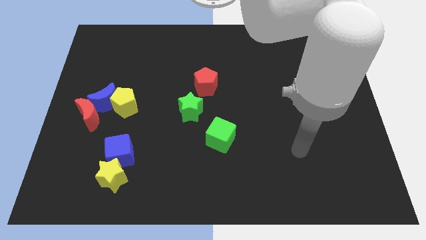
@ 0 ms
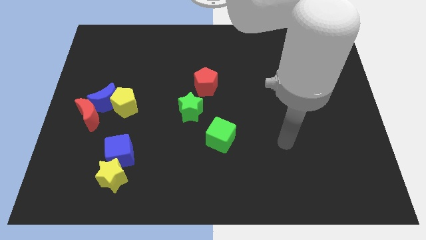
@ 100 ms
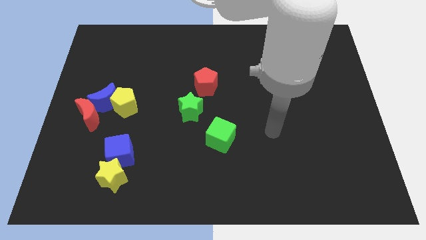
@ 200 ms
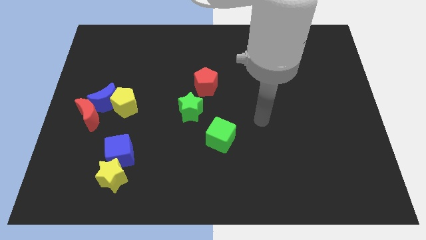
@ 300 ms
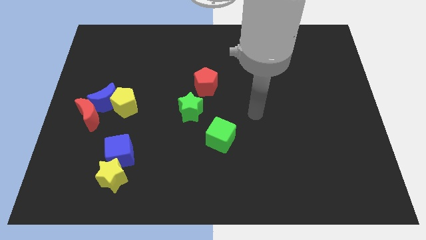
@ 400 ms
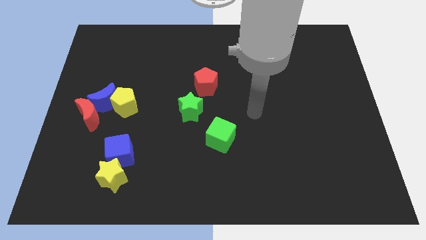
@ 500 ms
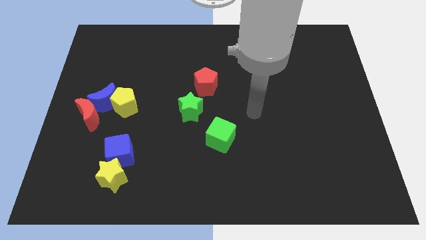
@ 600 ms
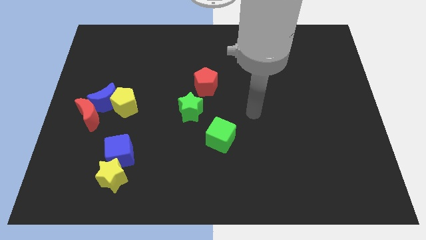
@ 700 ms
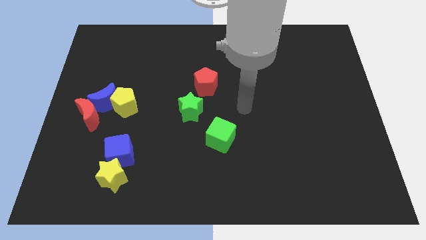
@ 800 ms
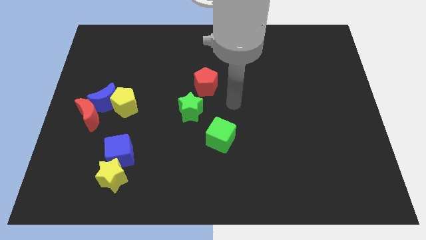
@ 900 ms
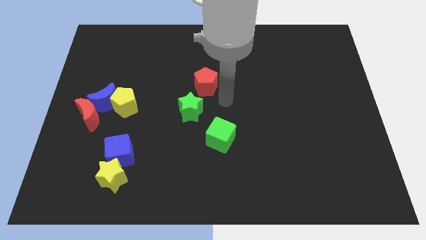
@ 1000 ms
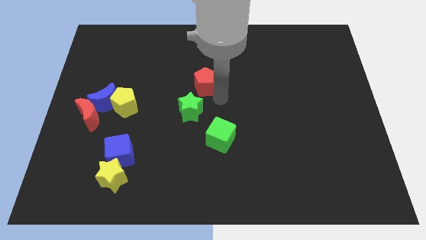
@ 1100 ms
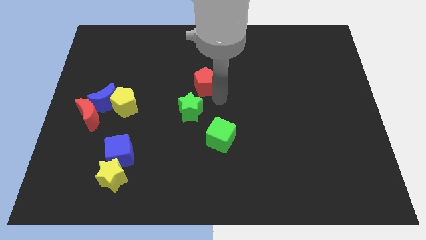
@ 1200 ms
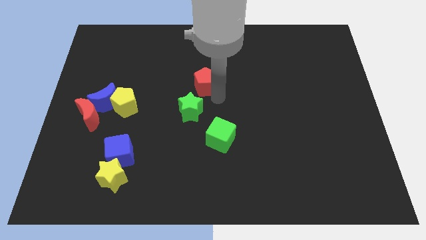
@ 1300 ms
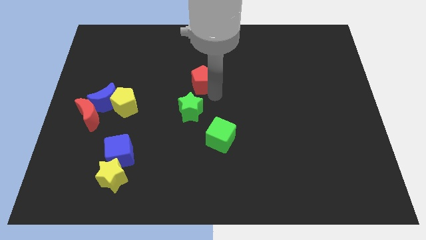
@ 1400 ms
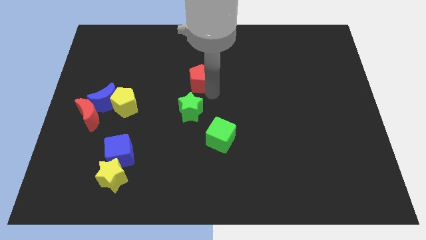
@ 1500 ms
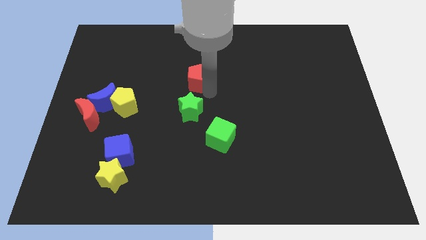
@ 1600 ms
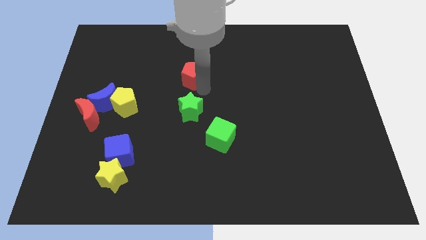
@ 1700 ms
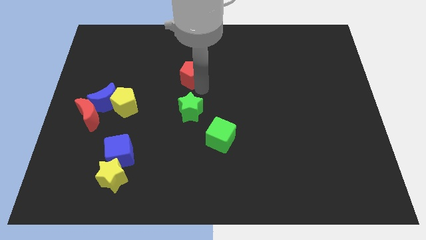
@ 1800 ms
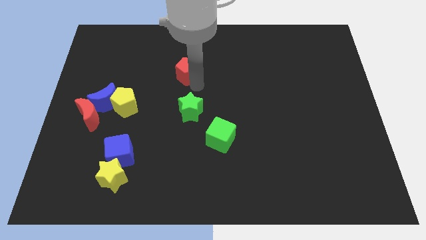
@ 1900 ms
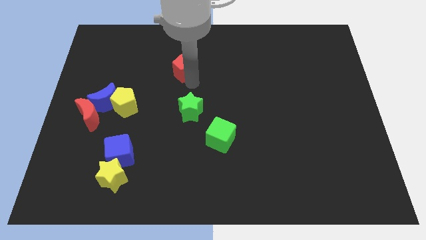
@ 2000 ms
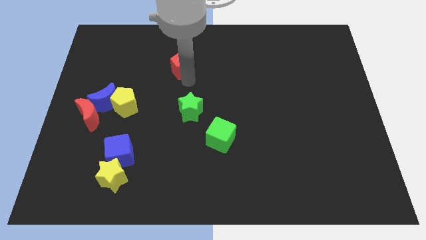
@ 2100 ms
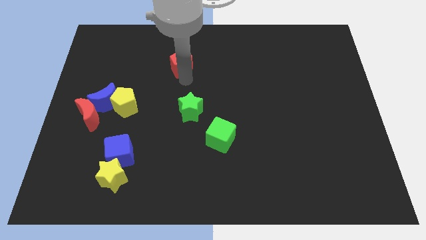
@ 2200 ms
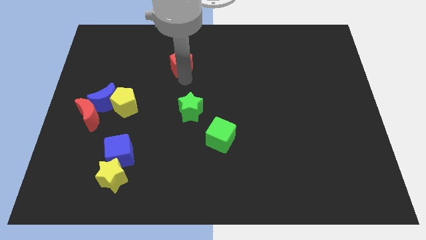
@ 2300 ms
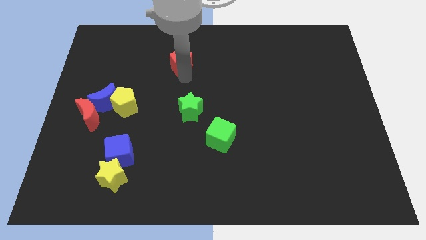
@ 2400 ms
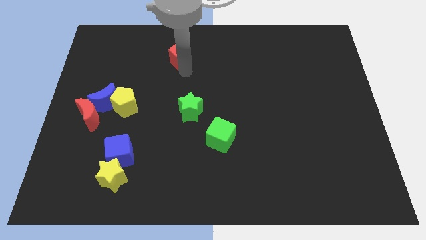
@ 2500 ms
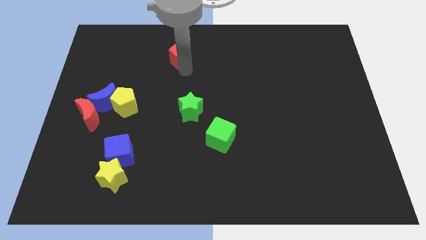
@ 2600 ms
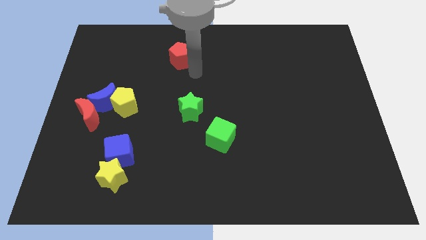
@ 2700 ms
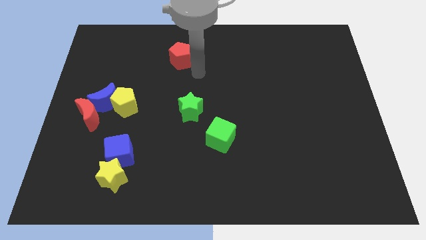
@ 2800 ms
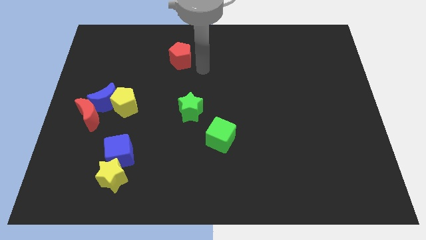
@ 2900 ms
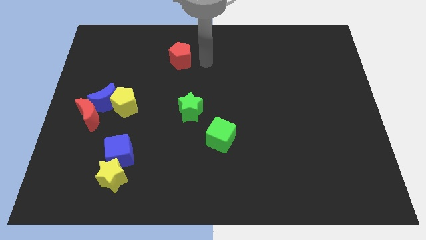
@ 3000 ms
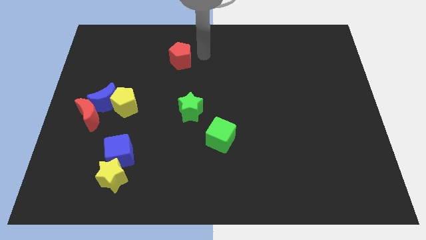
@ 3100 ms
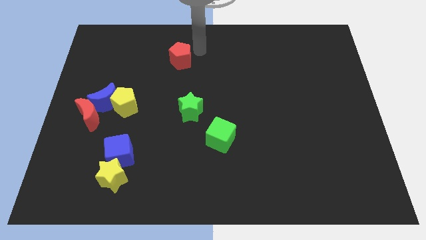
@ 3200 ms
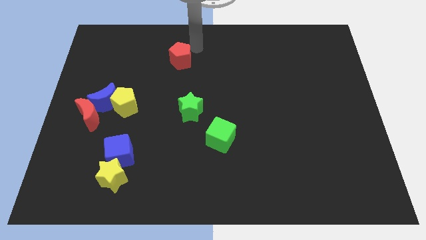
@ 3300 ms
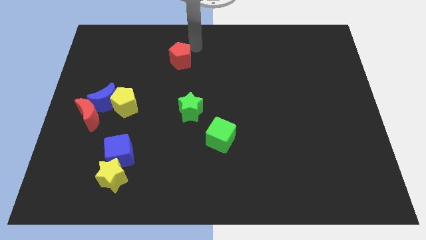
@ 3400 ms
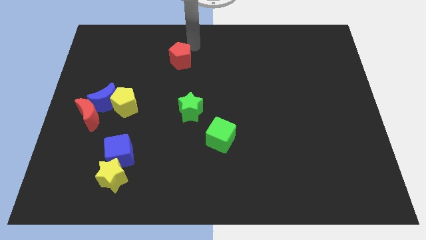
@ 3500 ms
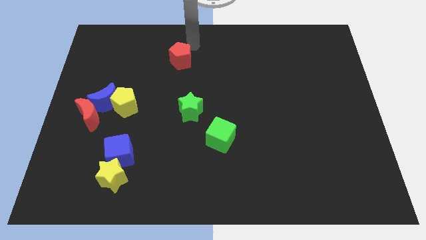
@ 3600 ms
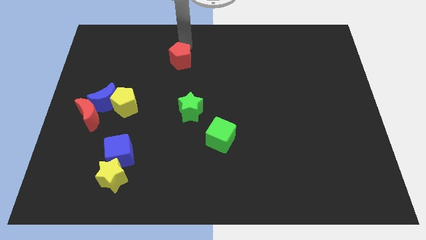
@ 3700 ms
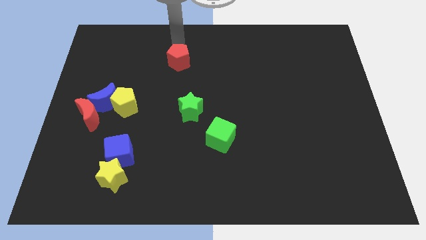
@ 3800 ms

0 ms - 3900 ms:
place the arm above the red pentagon

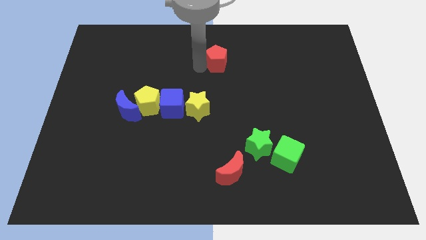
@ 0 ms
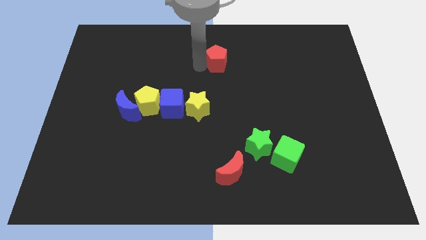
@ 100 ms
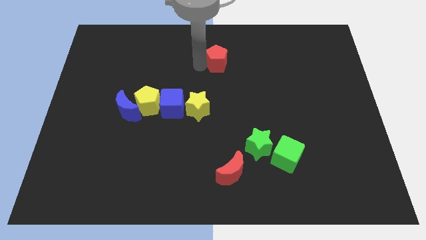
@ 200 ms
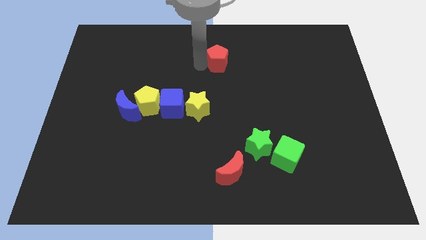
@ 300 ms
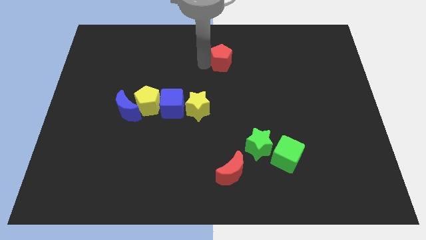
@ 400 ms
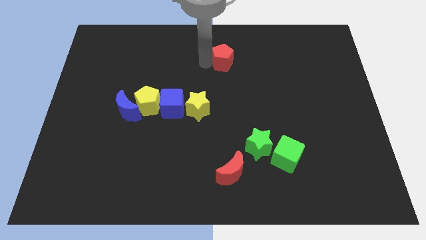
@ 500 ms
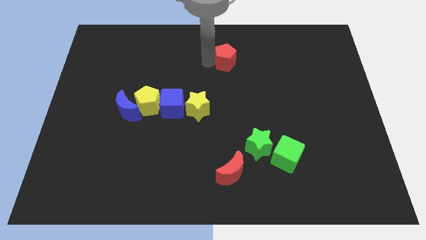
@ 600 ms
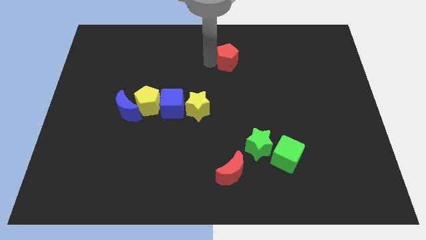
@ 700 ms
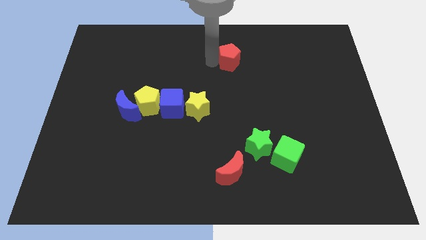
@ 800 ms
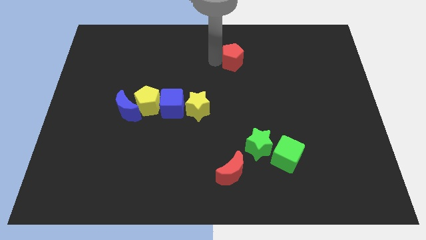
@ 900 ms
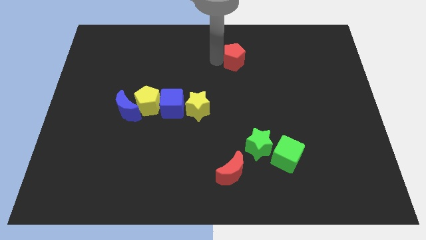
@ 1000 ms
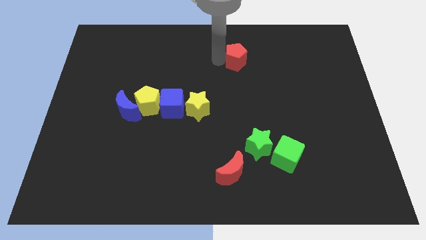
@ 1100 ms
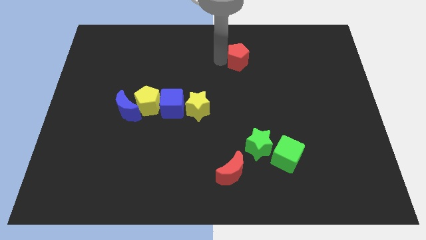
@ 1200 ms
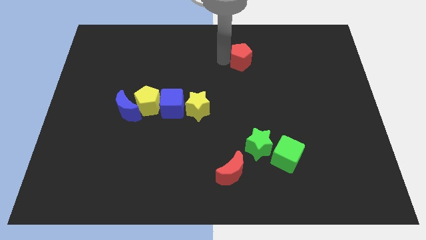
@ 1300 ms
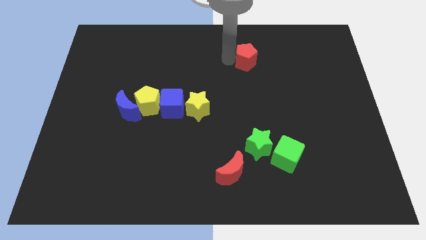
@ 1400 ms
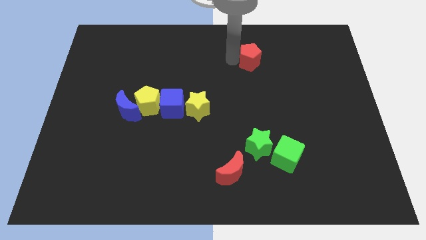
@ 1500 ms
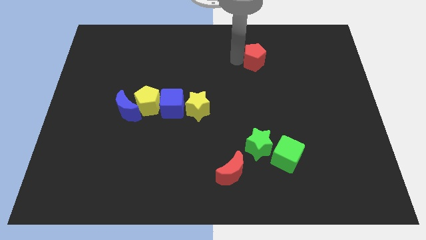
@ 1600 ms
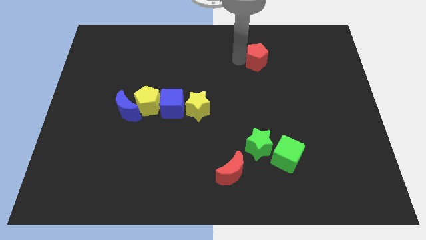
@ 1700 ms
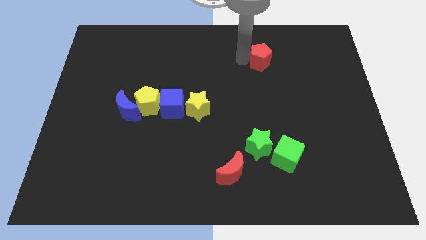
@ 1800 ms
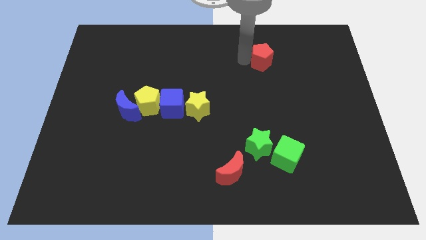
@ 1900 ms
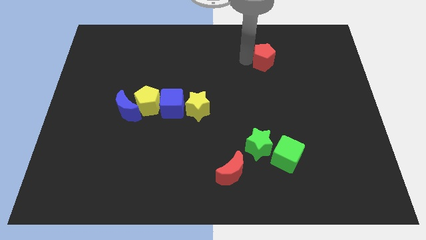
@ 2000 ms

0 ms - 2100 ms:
push the red pentagon towards right

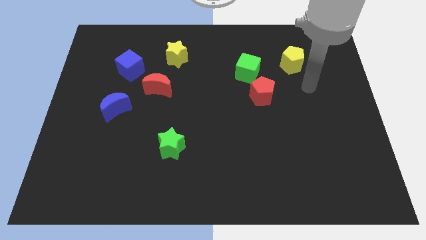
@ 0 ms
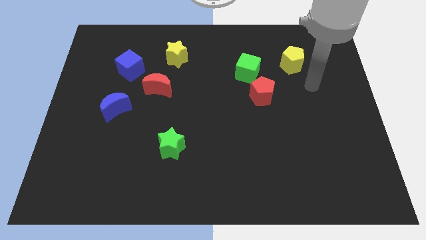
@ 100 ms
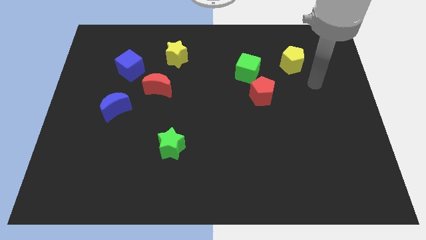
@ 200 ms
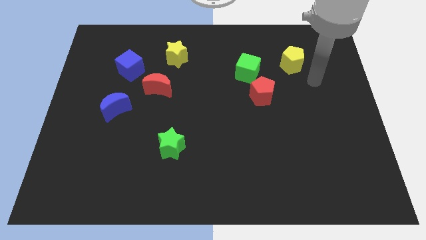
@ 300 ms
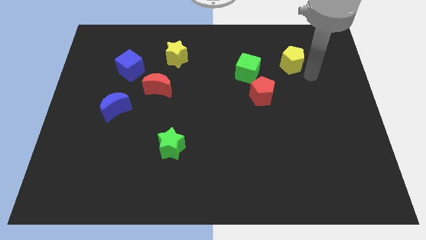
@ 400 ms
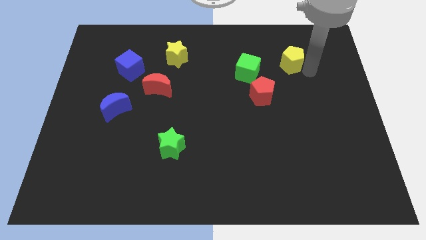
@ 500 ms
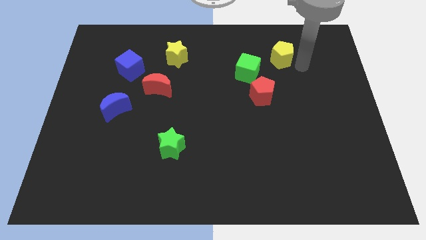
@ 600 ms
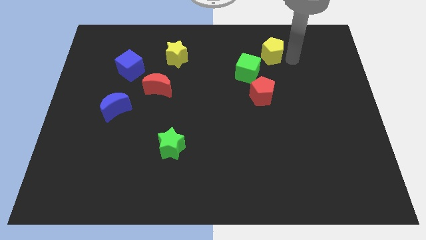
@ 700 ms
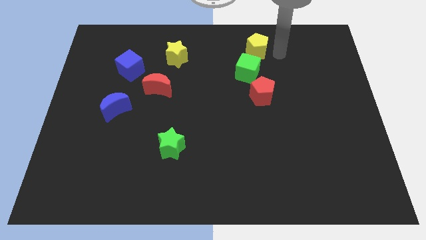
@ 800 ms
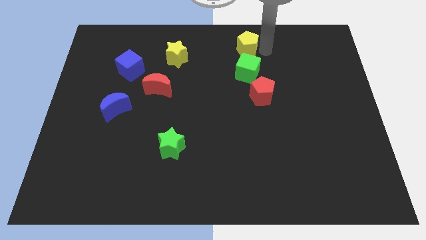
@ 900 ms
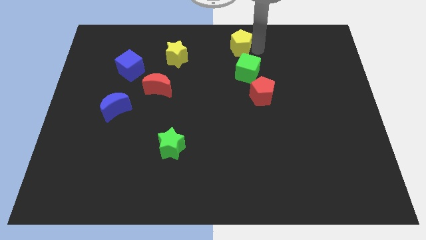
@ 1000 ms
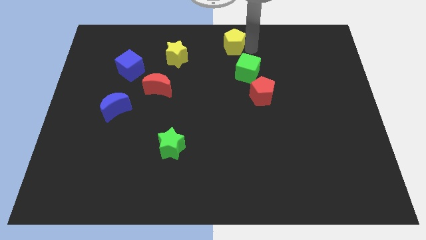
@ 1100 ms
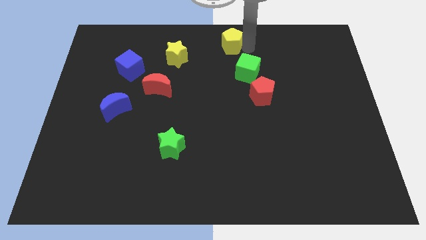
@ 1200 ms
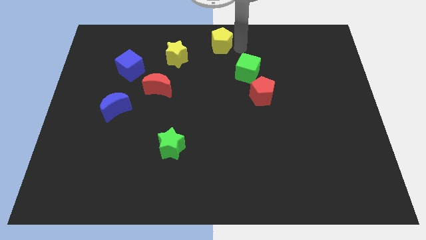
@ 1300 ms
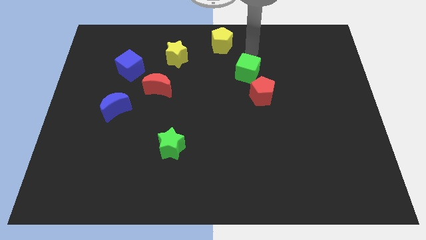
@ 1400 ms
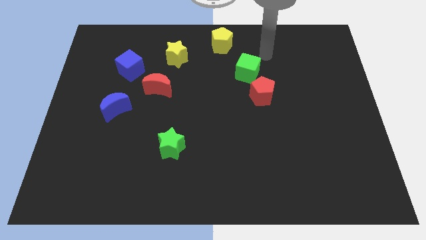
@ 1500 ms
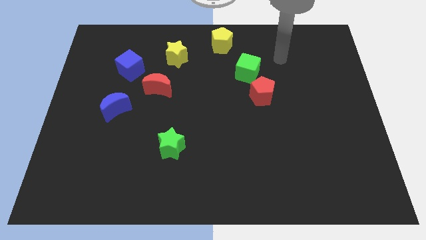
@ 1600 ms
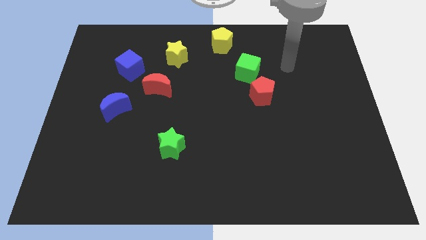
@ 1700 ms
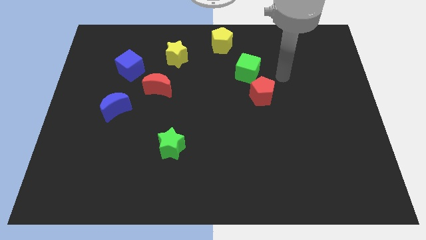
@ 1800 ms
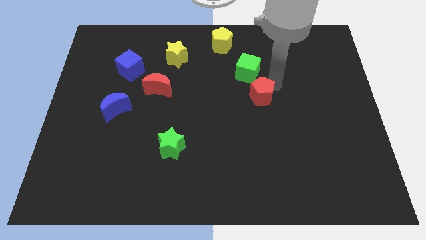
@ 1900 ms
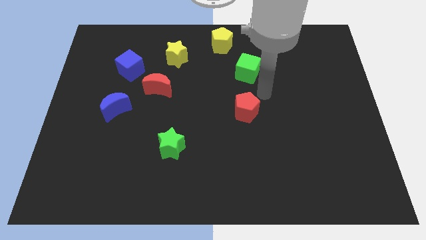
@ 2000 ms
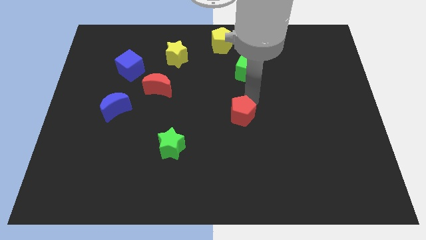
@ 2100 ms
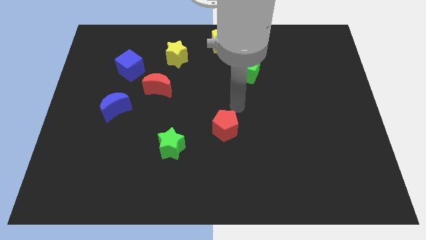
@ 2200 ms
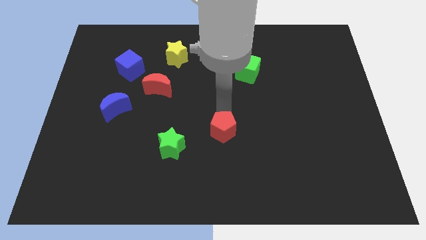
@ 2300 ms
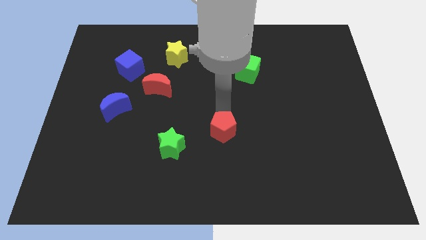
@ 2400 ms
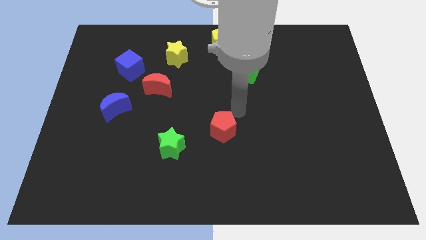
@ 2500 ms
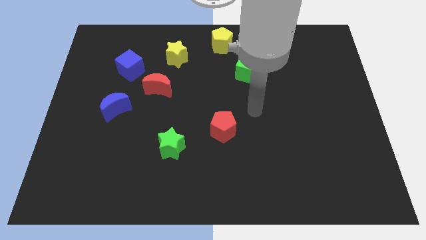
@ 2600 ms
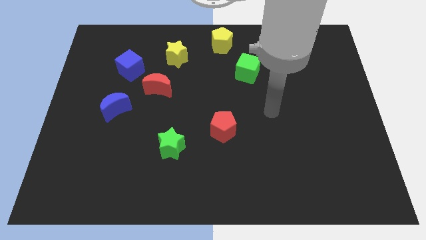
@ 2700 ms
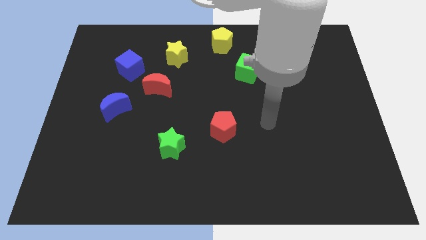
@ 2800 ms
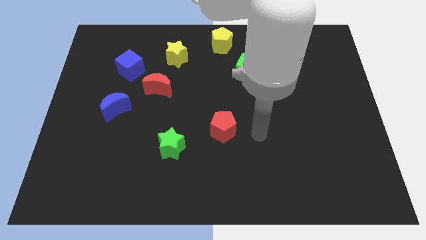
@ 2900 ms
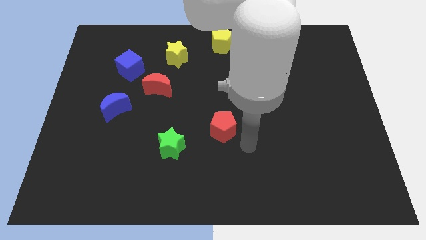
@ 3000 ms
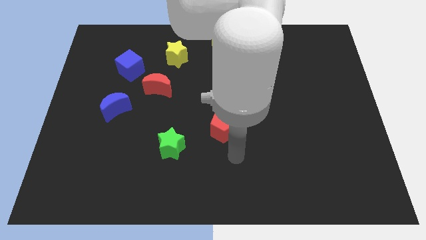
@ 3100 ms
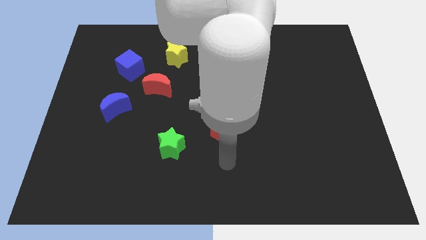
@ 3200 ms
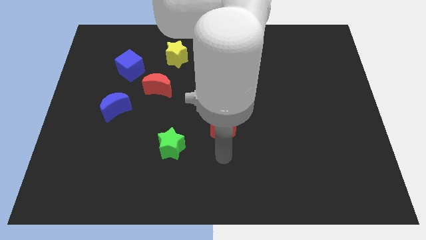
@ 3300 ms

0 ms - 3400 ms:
push the red pentagon diagonally to the top right side of the green star
